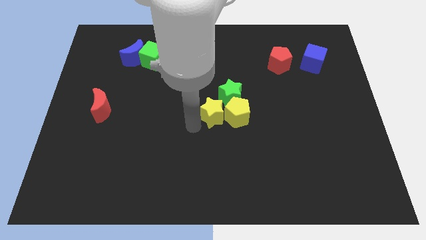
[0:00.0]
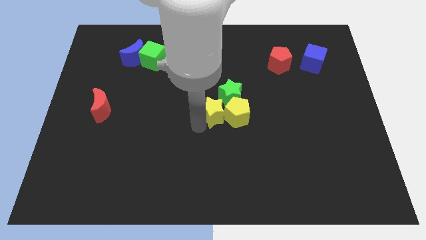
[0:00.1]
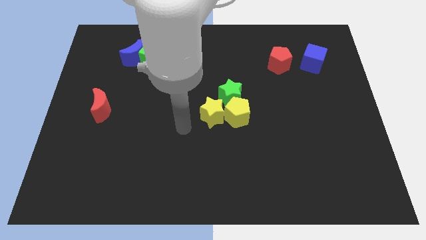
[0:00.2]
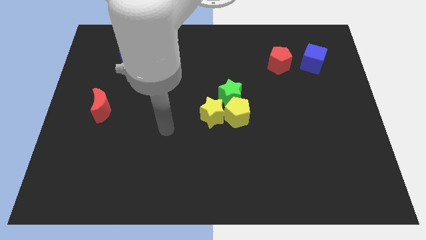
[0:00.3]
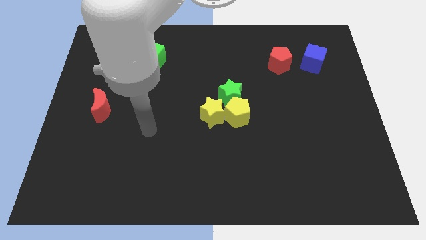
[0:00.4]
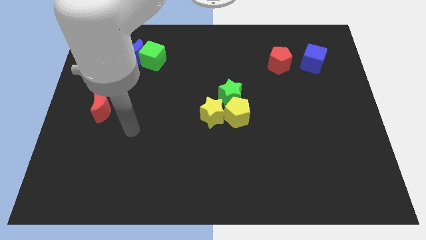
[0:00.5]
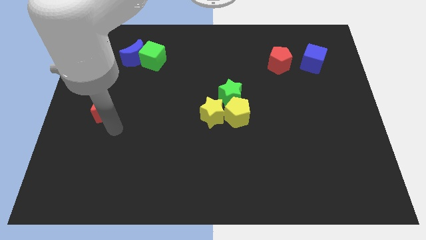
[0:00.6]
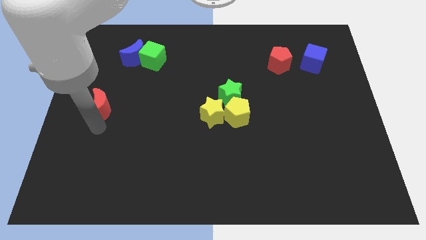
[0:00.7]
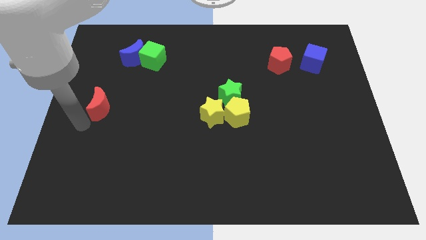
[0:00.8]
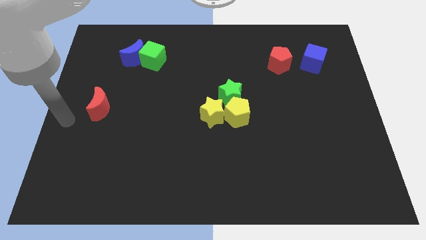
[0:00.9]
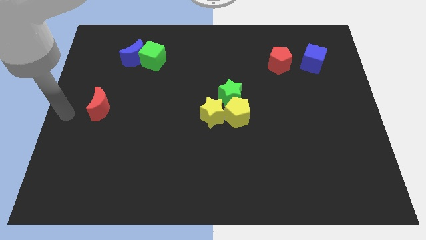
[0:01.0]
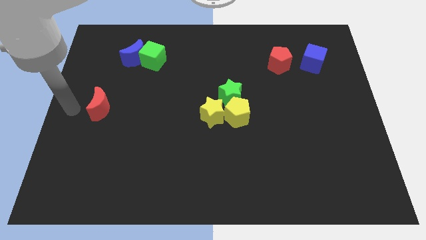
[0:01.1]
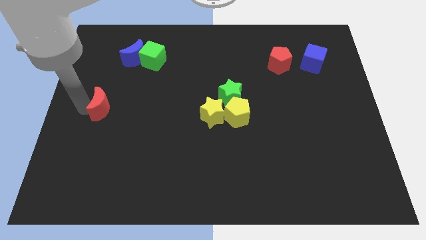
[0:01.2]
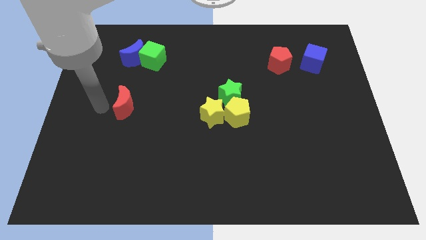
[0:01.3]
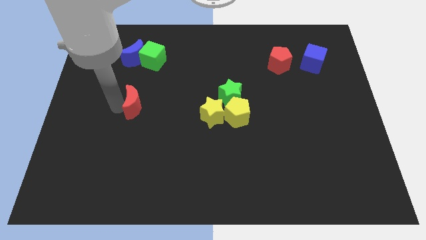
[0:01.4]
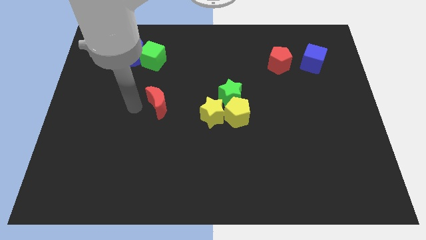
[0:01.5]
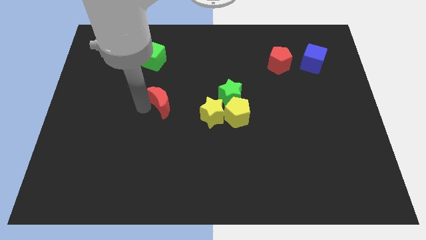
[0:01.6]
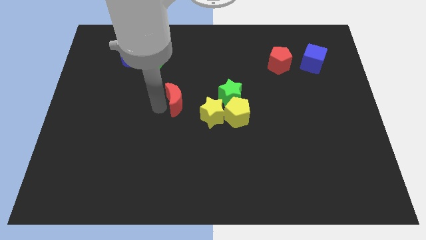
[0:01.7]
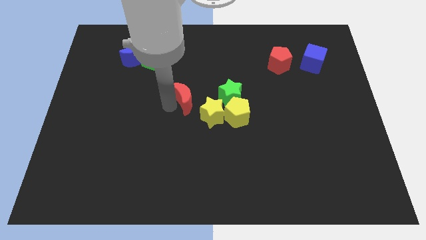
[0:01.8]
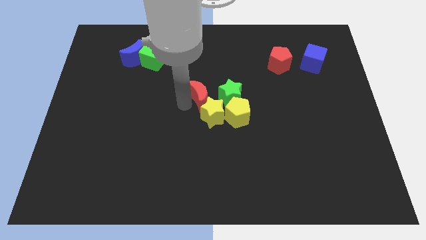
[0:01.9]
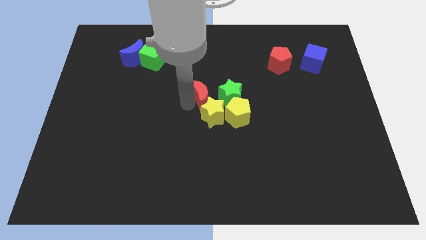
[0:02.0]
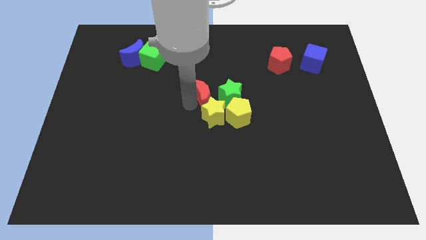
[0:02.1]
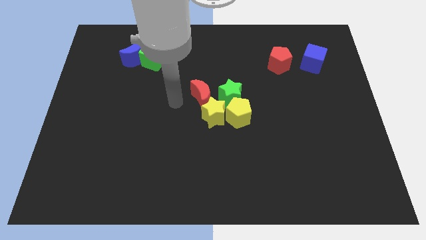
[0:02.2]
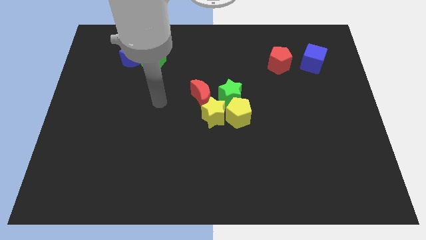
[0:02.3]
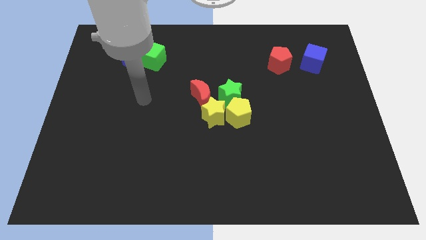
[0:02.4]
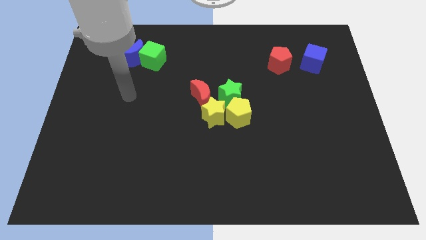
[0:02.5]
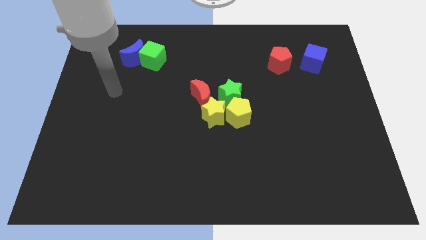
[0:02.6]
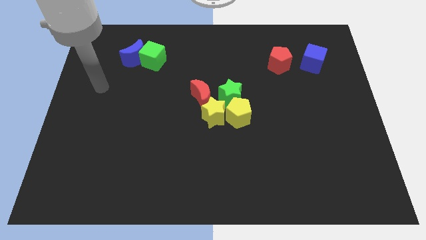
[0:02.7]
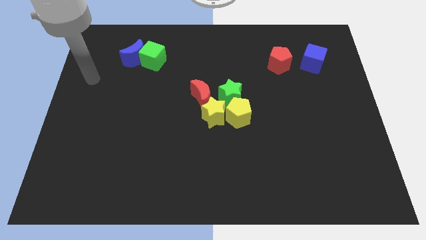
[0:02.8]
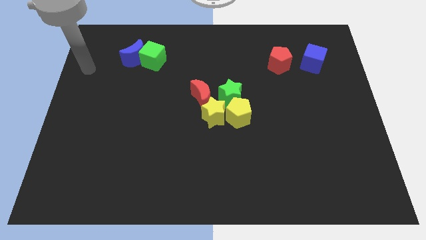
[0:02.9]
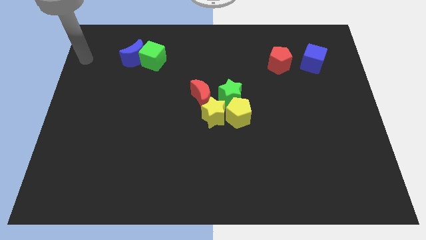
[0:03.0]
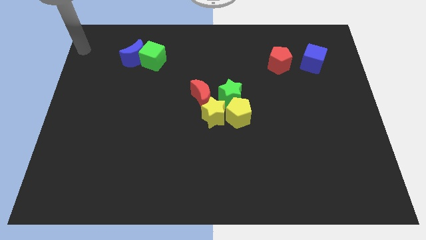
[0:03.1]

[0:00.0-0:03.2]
move the red crescent to the top of the yellow star

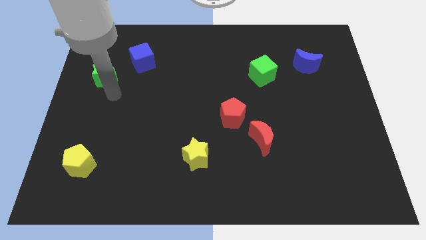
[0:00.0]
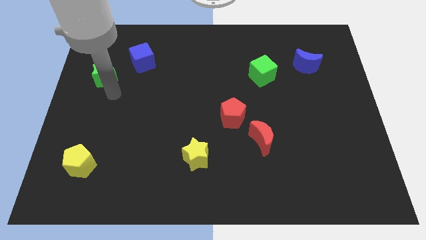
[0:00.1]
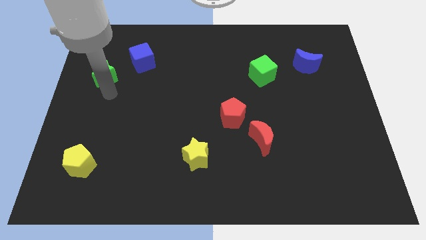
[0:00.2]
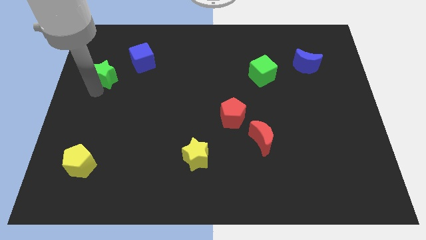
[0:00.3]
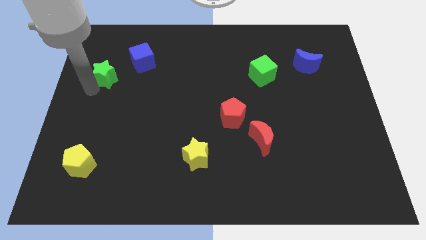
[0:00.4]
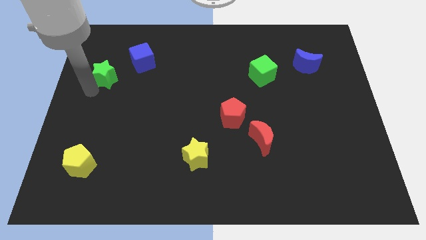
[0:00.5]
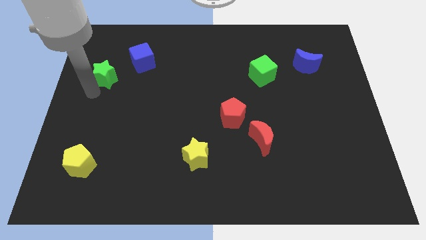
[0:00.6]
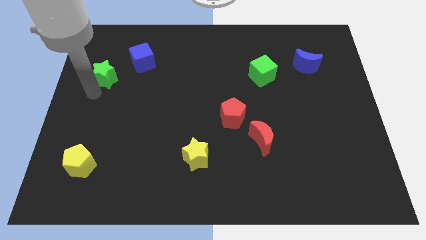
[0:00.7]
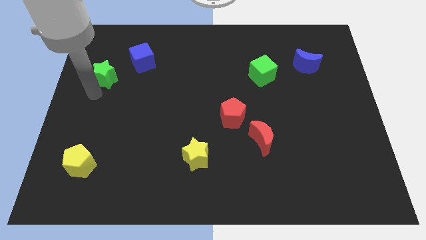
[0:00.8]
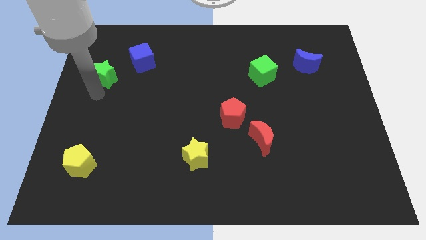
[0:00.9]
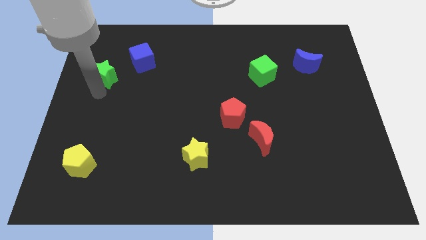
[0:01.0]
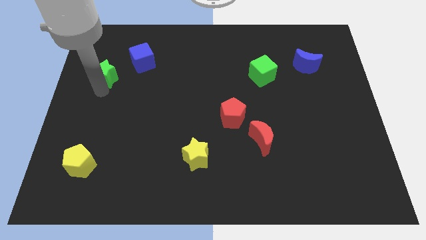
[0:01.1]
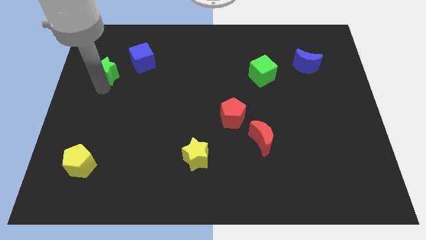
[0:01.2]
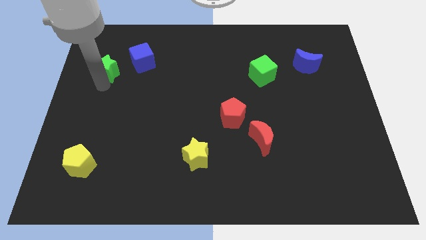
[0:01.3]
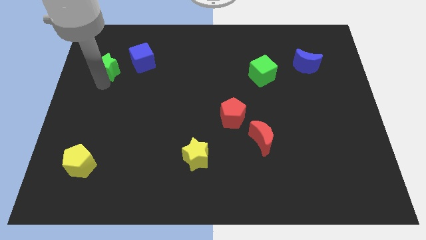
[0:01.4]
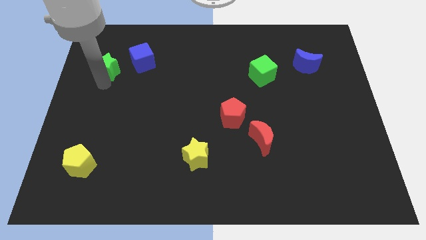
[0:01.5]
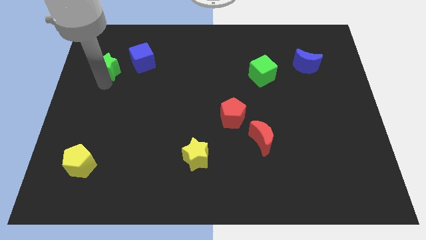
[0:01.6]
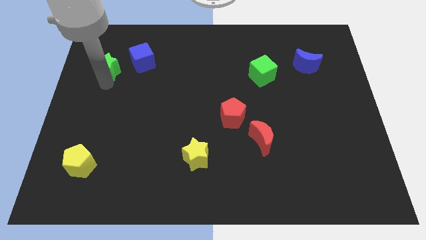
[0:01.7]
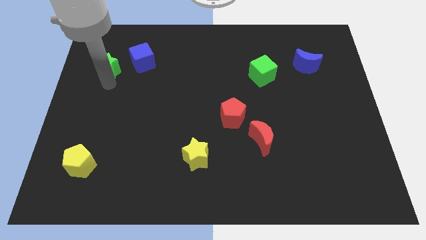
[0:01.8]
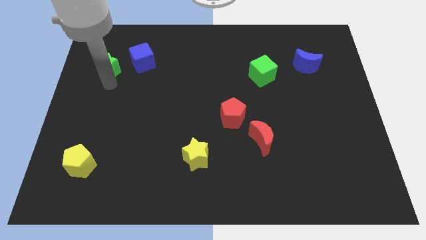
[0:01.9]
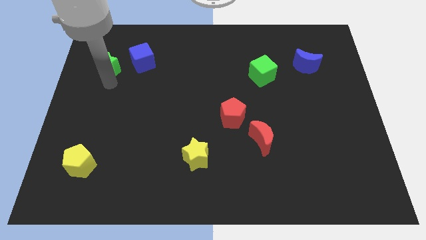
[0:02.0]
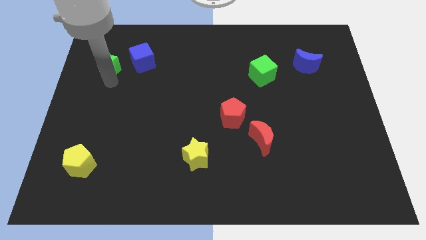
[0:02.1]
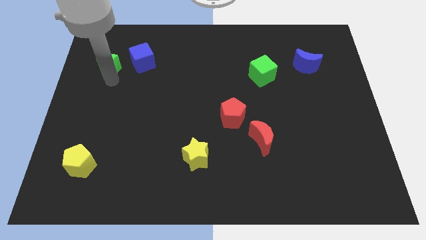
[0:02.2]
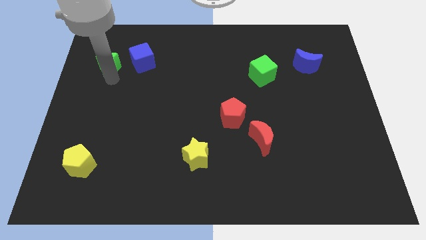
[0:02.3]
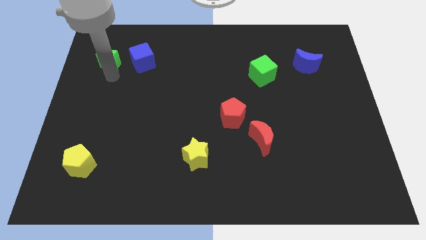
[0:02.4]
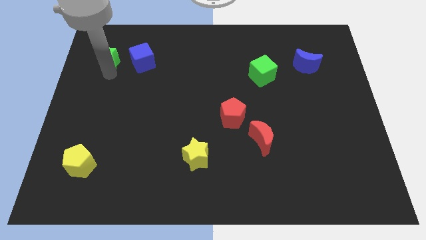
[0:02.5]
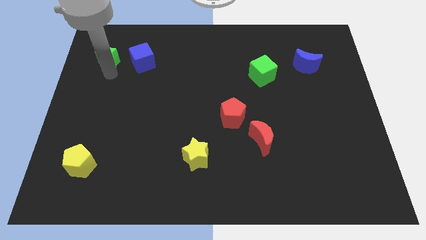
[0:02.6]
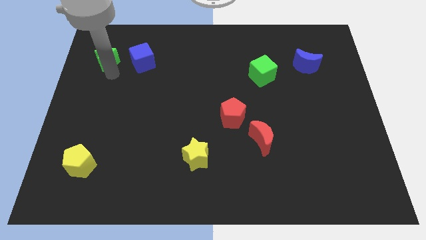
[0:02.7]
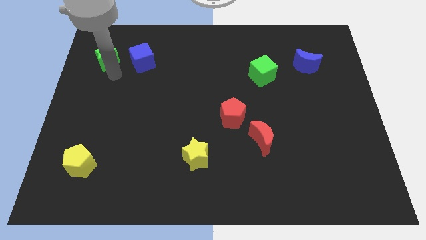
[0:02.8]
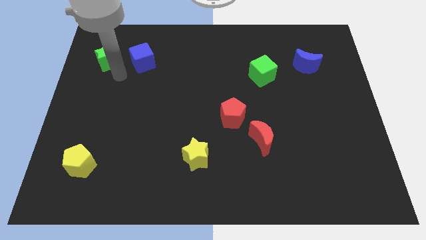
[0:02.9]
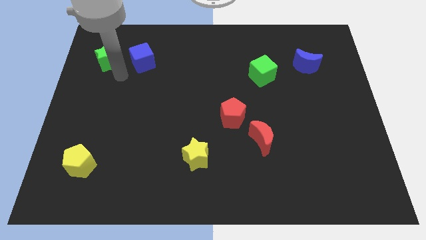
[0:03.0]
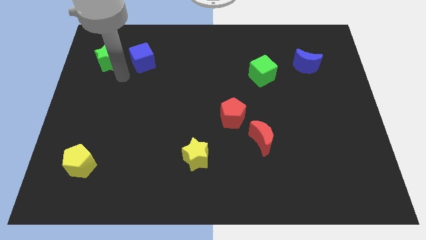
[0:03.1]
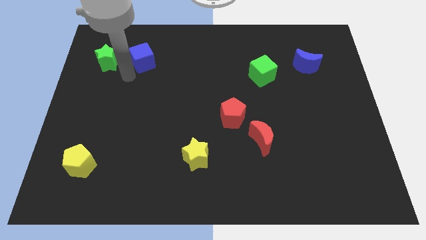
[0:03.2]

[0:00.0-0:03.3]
place the green star left to the blue cube

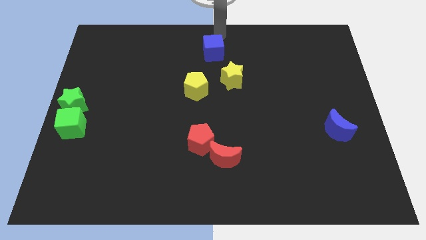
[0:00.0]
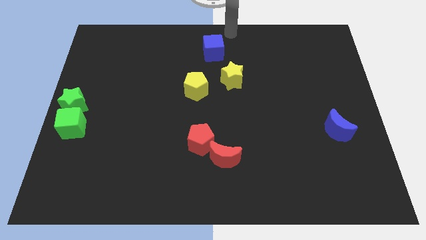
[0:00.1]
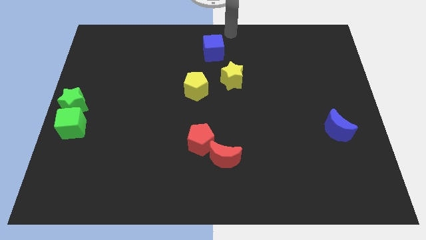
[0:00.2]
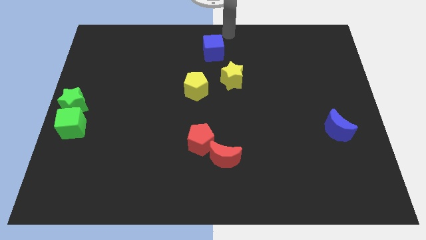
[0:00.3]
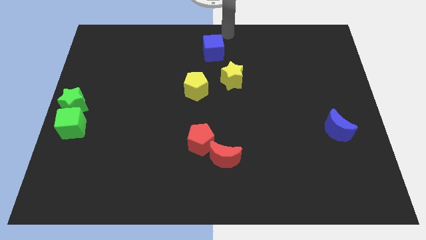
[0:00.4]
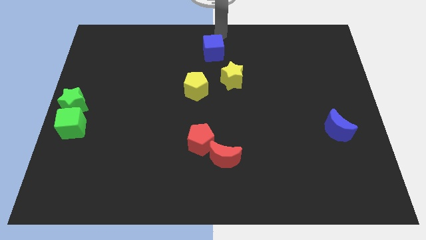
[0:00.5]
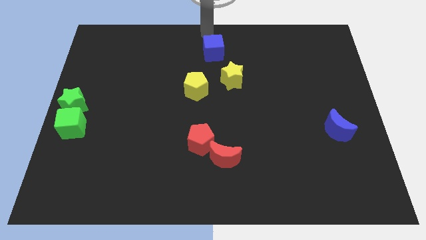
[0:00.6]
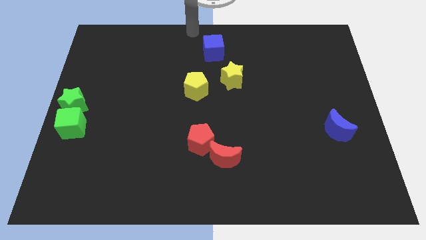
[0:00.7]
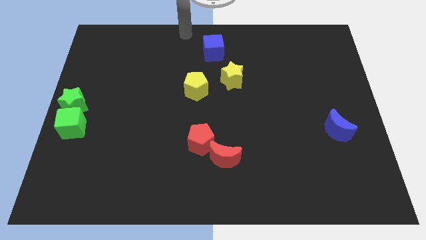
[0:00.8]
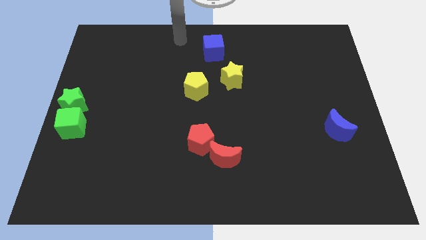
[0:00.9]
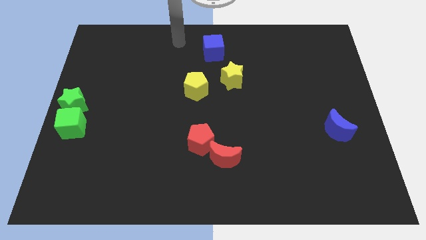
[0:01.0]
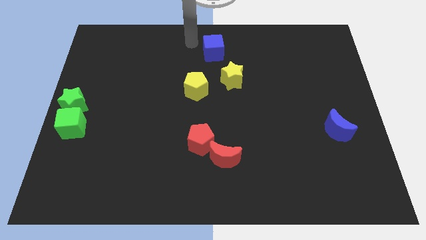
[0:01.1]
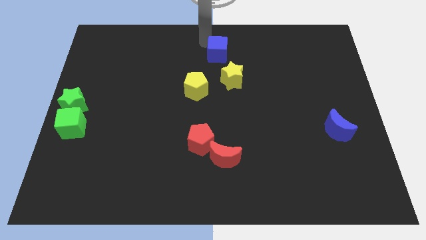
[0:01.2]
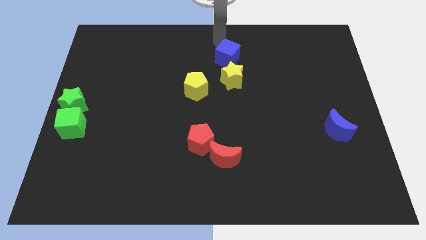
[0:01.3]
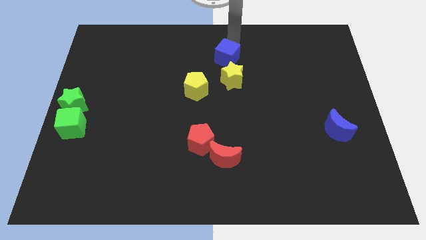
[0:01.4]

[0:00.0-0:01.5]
move blue cube to the top of the yellow star

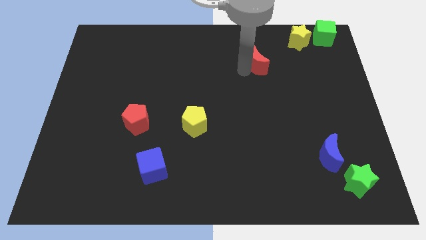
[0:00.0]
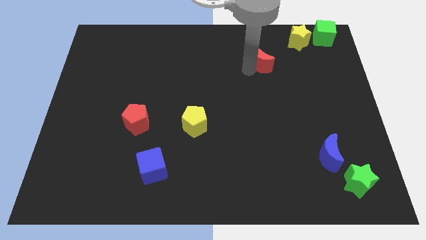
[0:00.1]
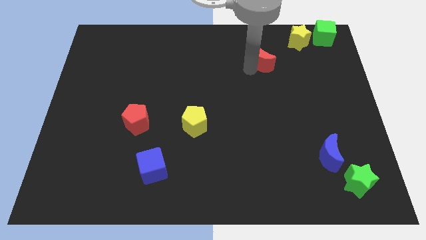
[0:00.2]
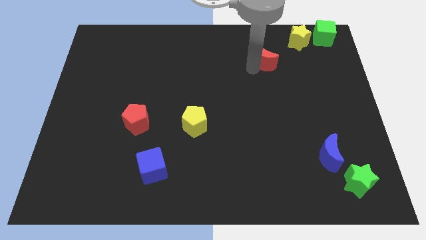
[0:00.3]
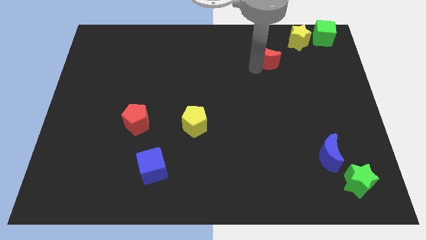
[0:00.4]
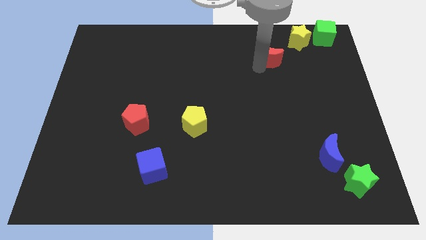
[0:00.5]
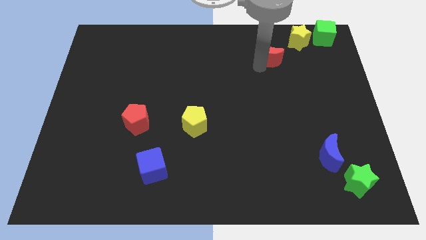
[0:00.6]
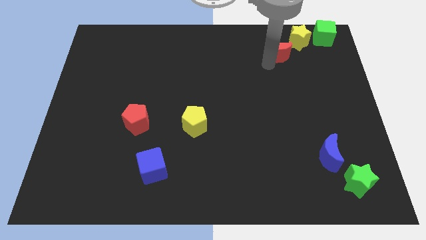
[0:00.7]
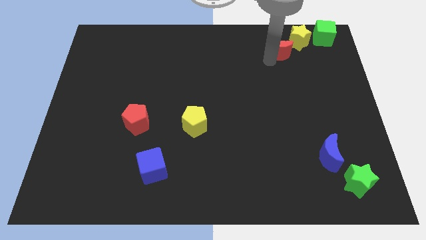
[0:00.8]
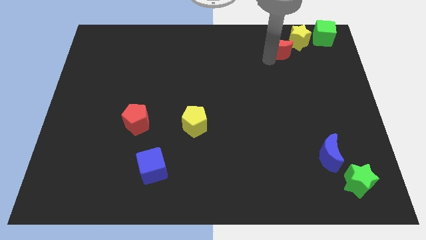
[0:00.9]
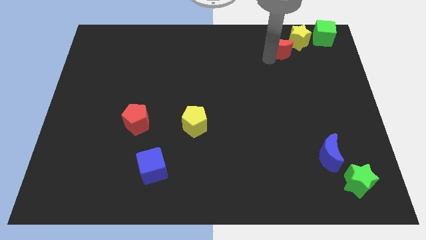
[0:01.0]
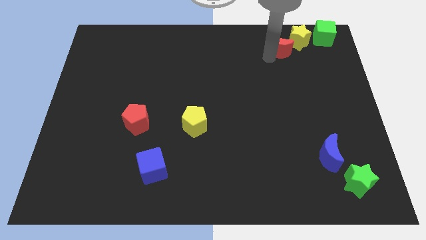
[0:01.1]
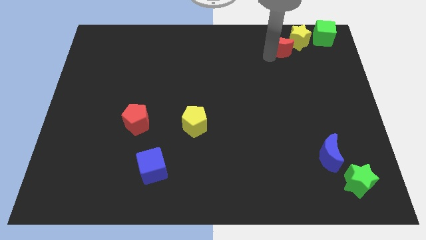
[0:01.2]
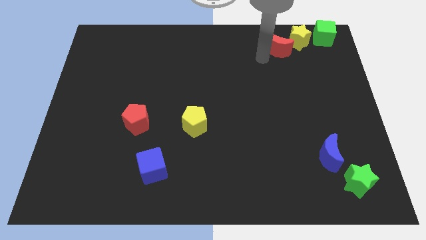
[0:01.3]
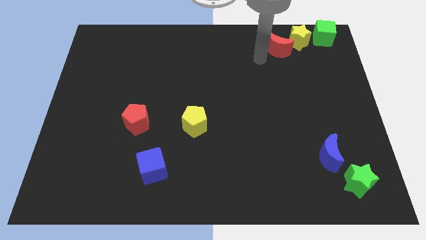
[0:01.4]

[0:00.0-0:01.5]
push the red crescent to the left of the yellow star
